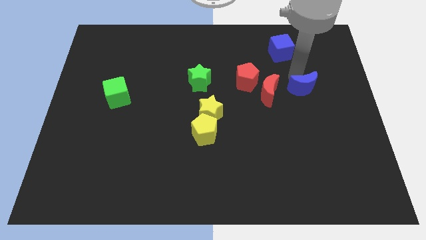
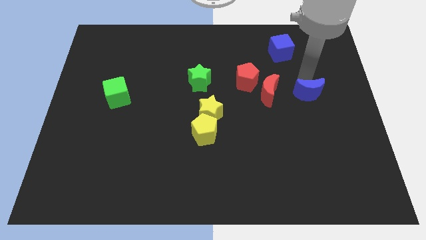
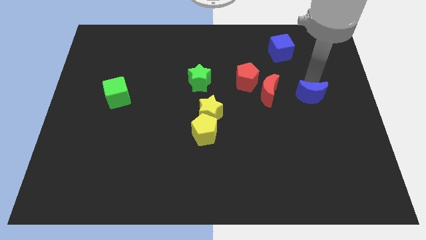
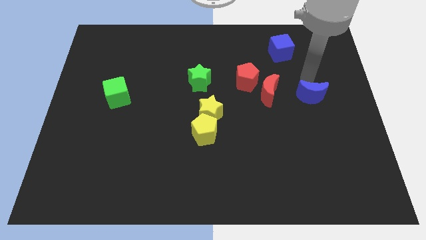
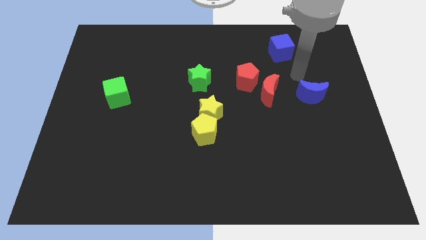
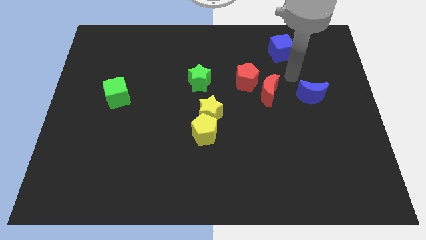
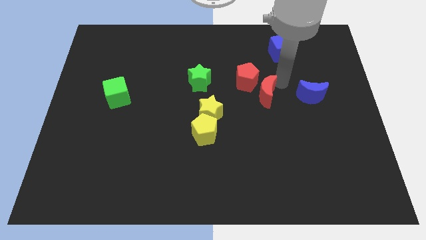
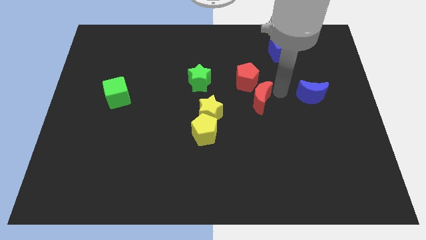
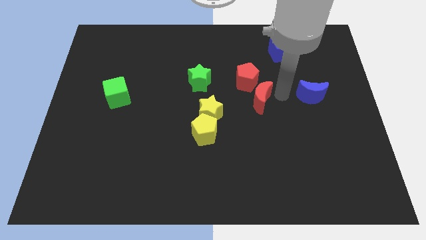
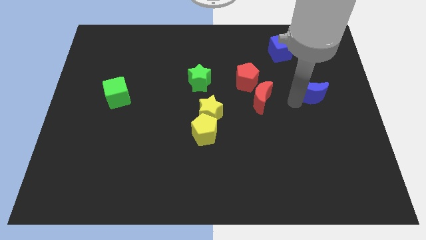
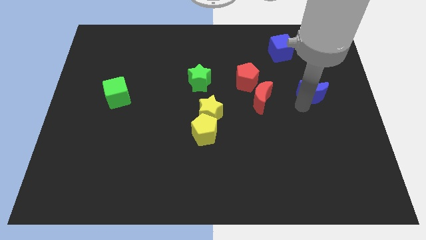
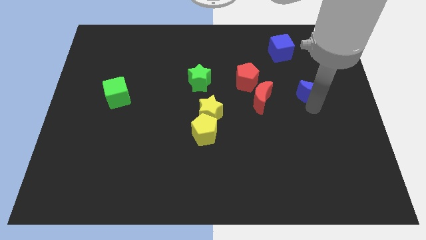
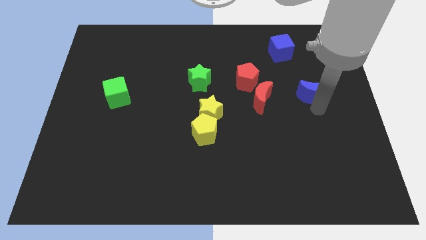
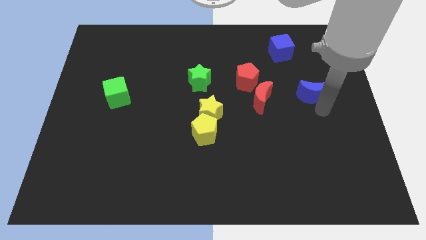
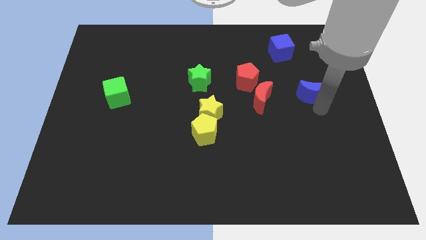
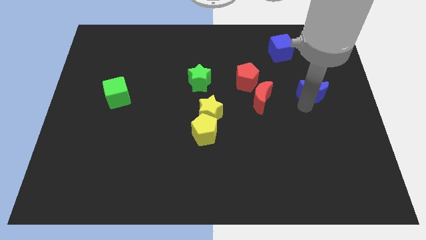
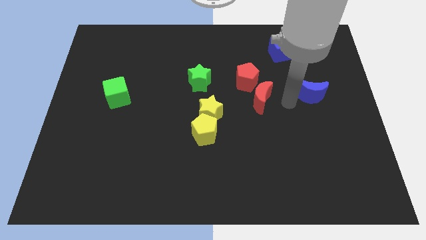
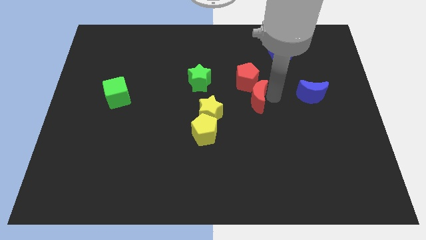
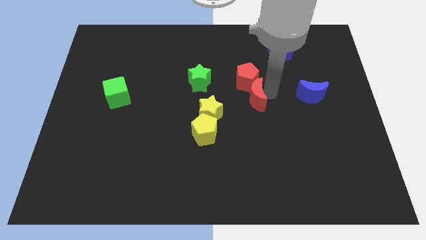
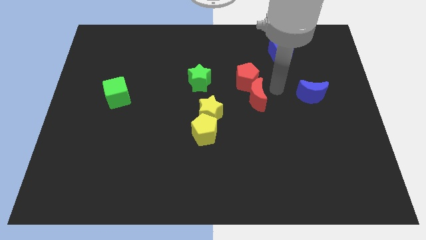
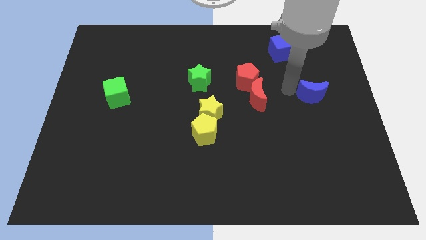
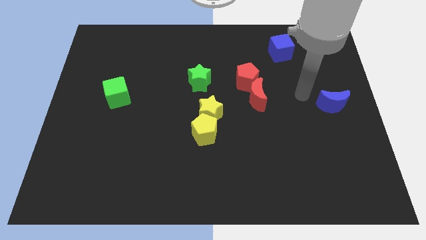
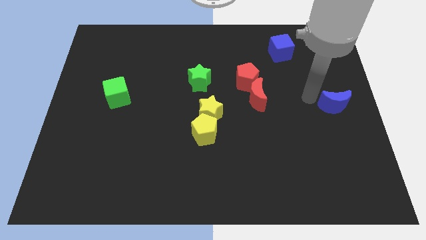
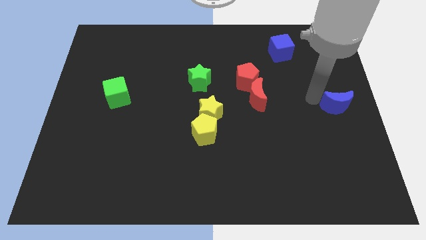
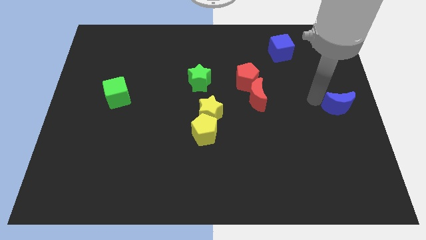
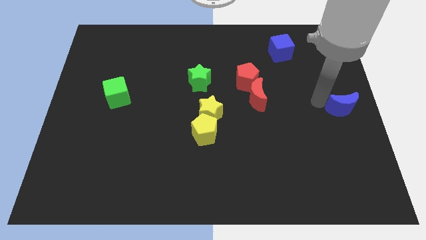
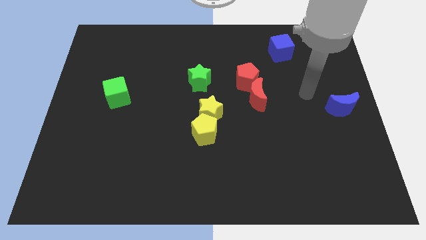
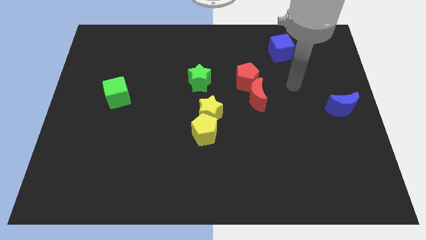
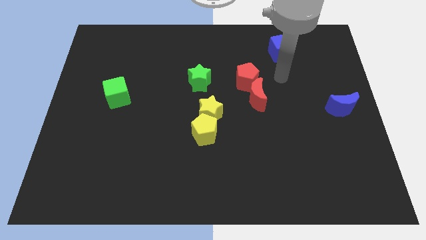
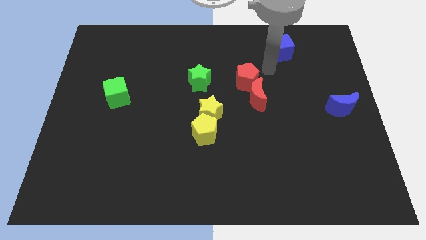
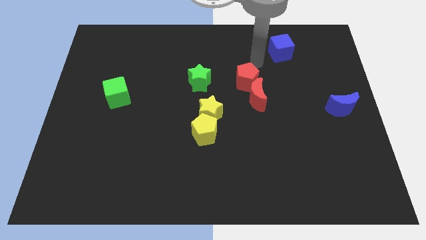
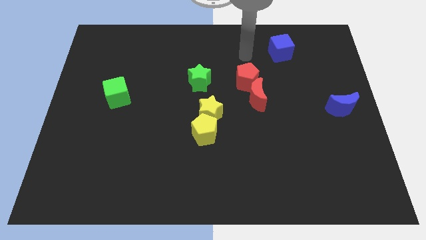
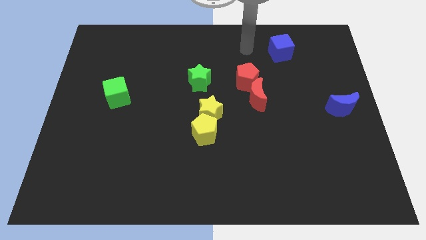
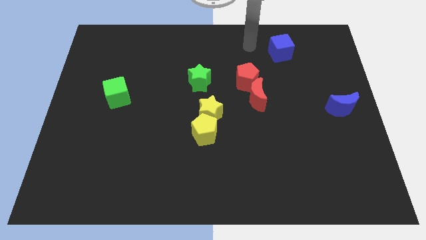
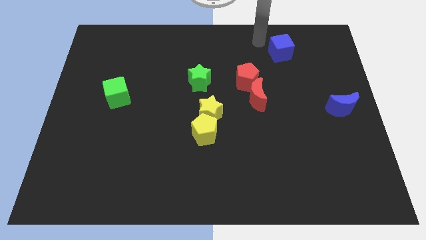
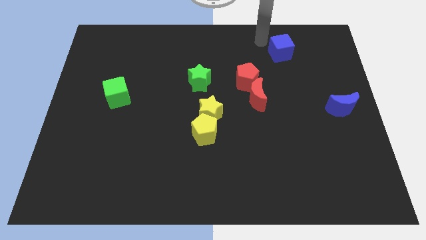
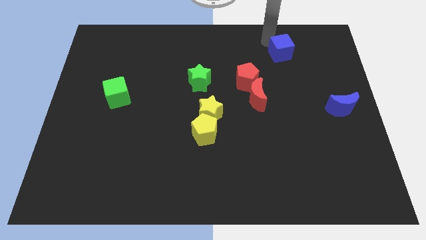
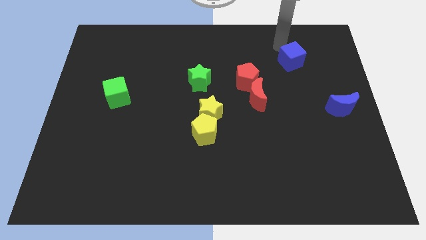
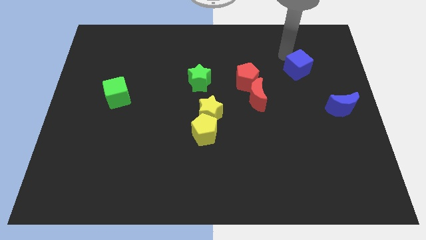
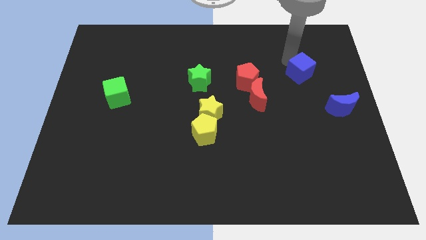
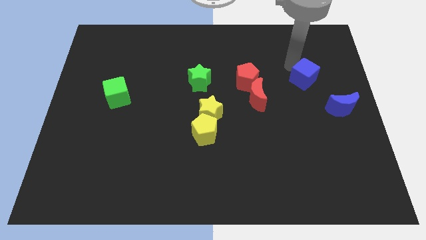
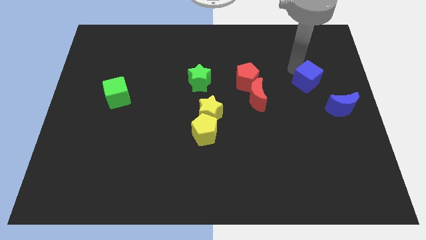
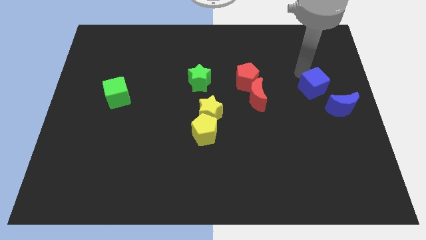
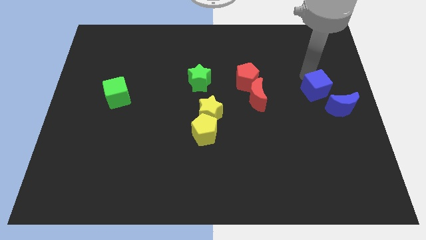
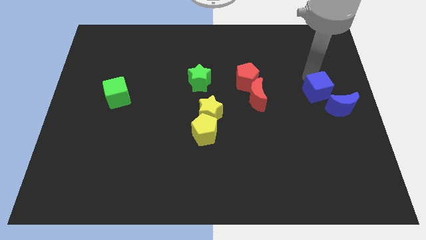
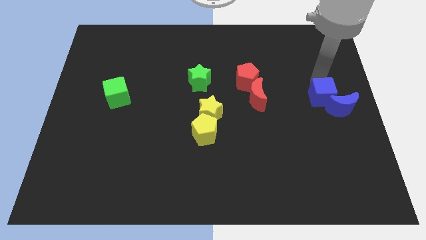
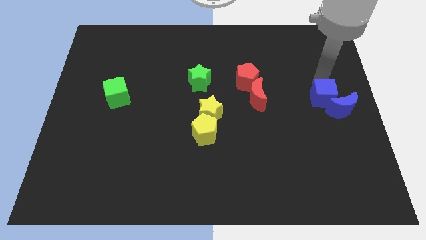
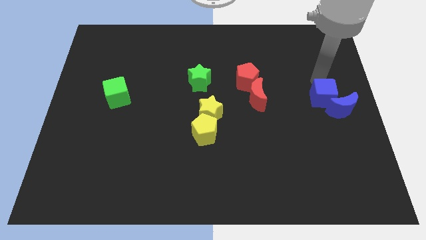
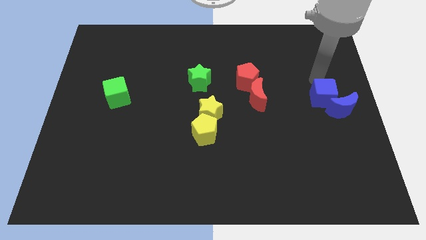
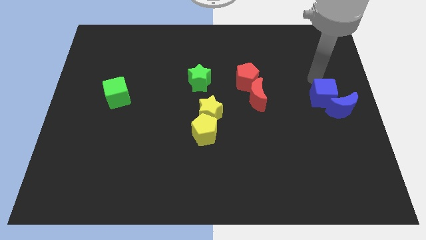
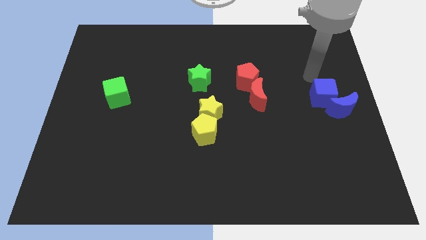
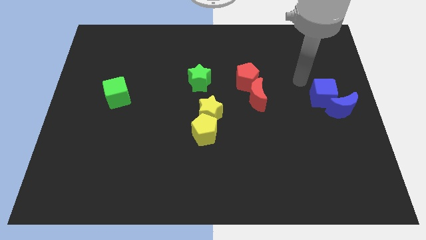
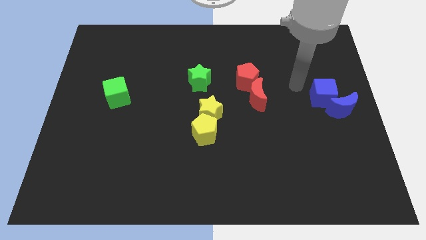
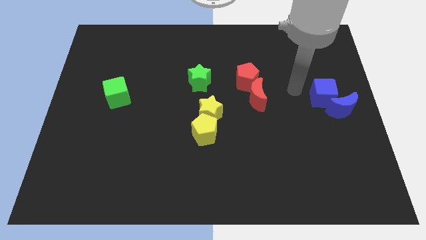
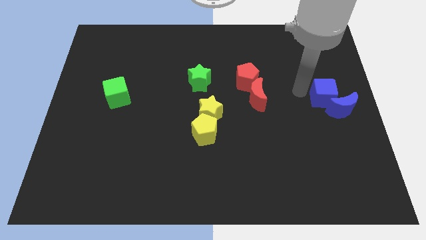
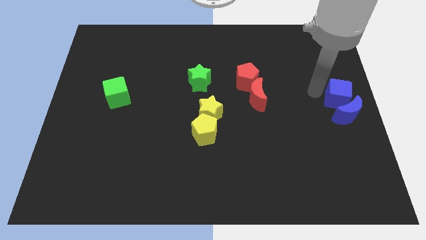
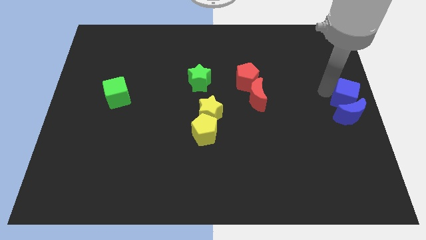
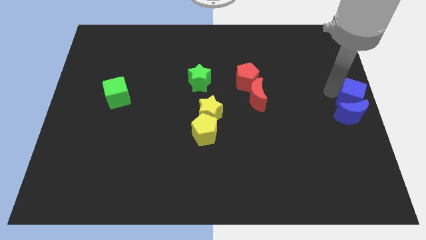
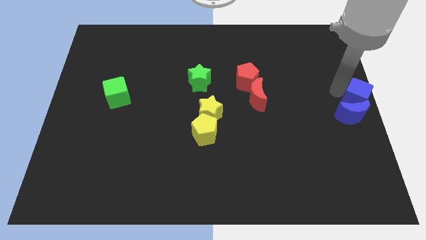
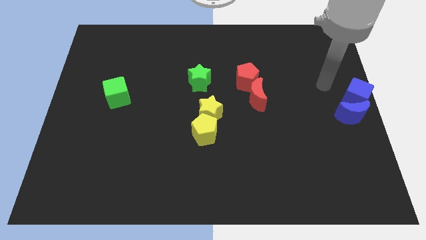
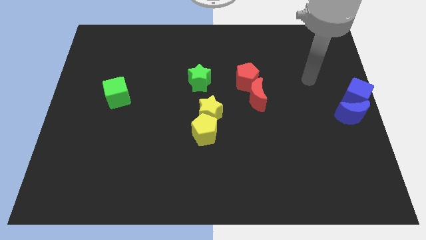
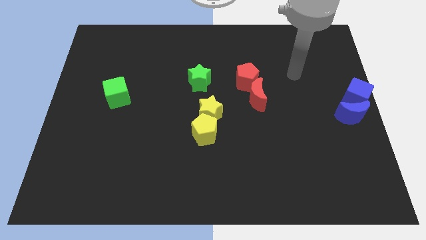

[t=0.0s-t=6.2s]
move the blue cube and blue moon to the right center of the board

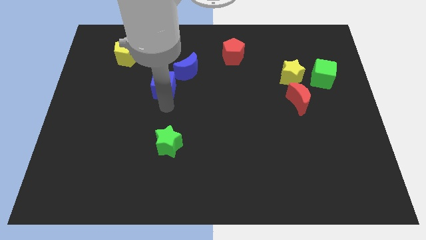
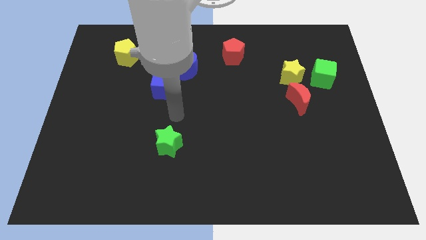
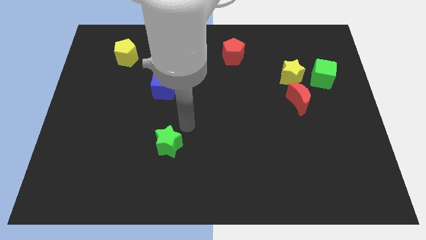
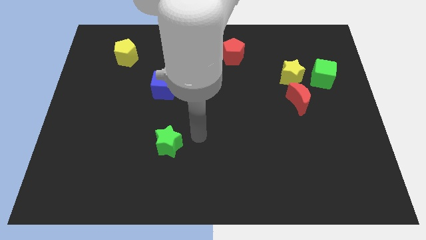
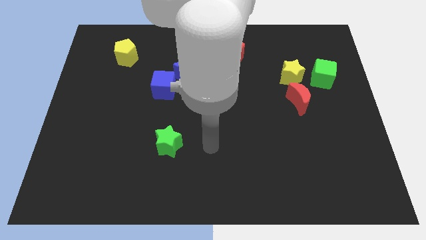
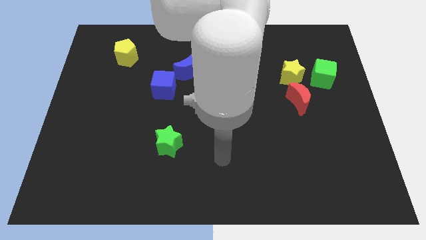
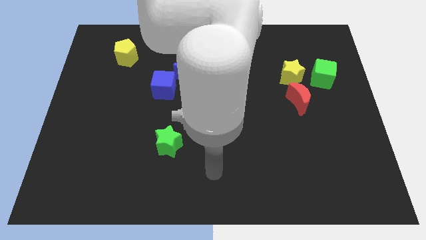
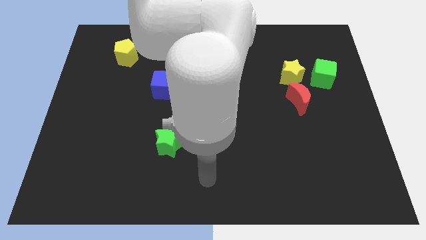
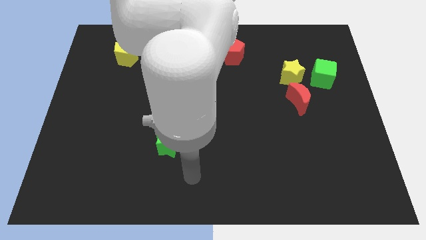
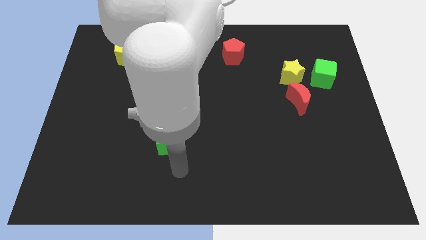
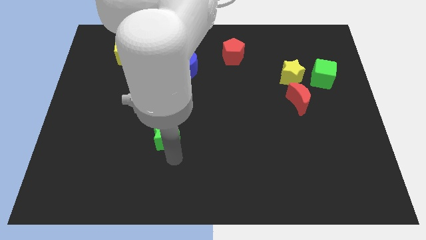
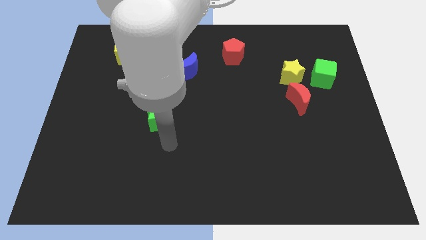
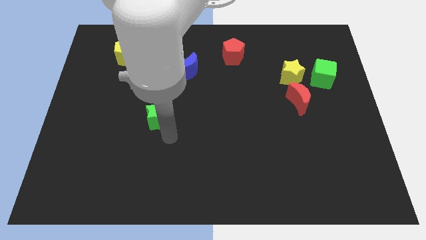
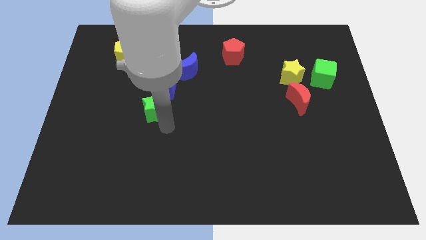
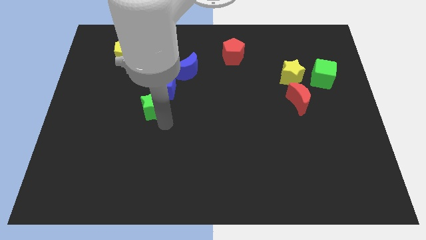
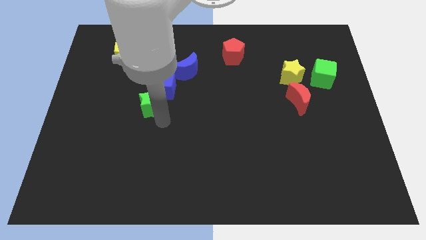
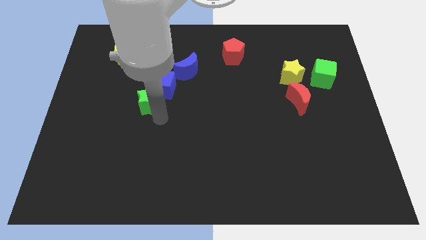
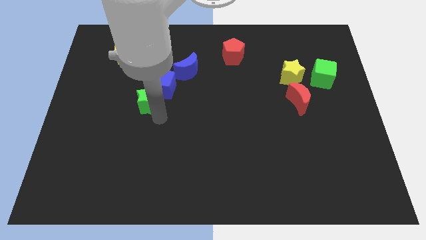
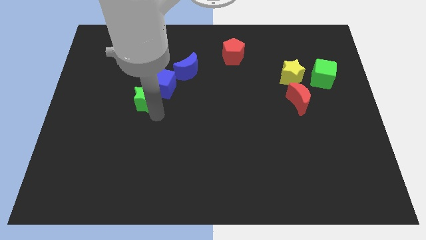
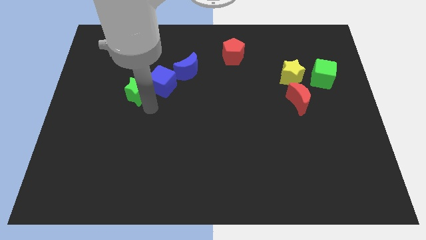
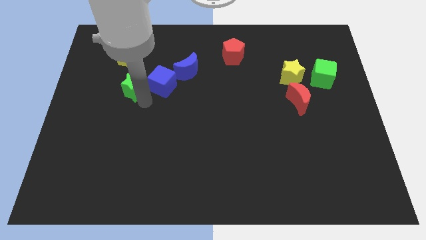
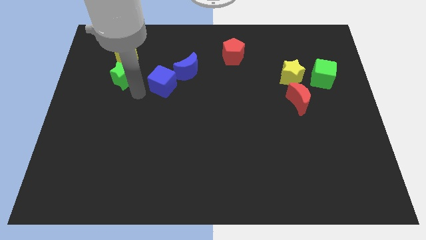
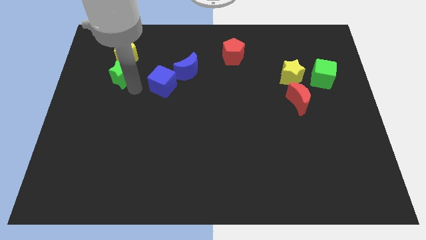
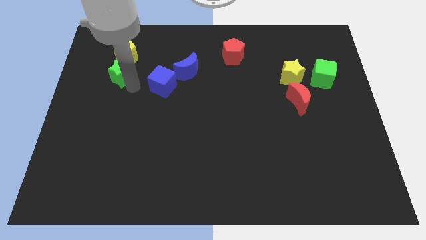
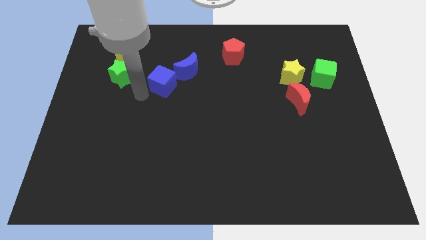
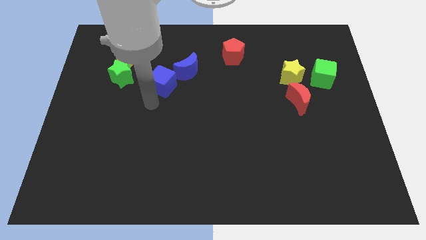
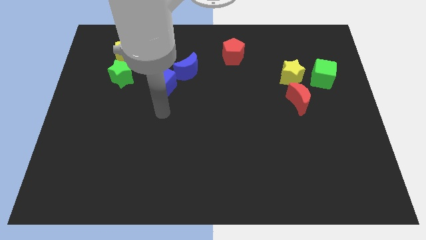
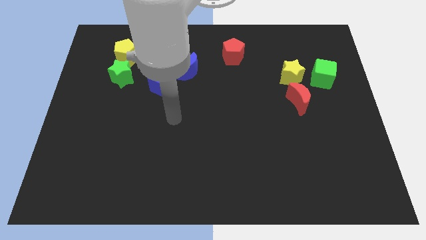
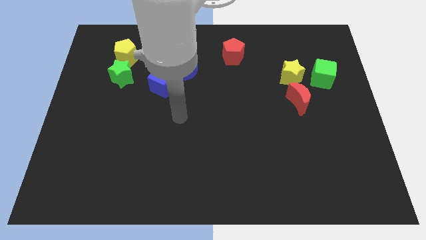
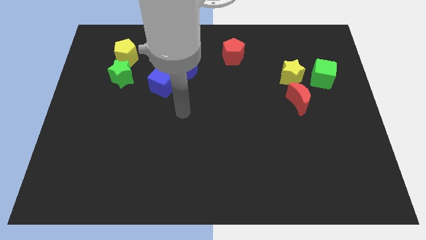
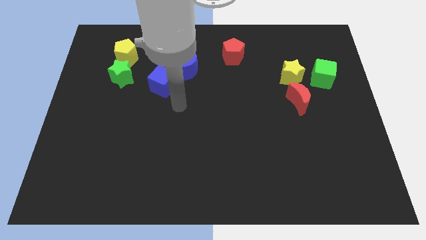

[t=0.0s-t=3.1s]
place the green star below the yellow pentagon
